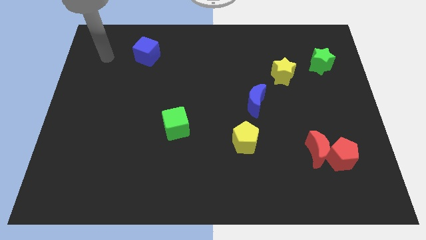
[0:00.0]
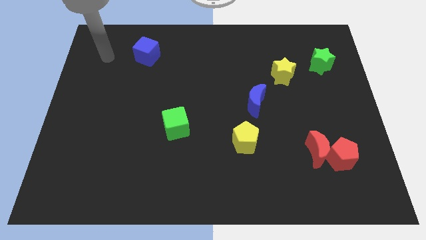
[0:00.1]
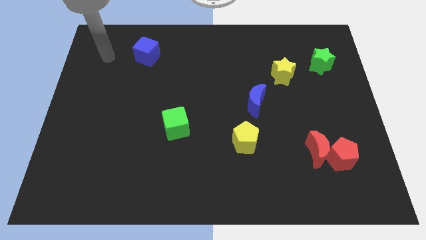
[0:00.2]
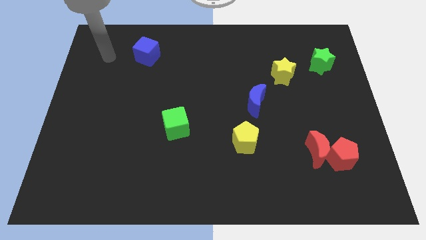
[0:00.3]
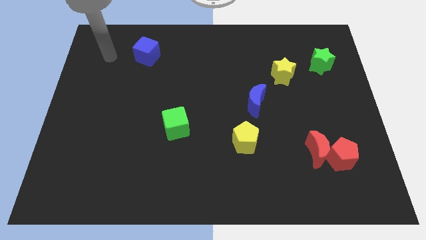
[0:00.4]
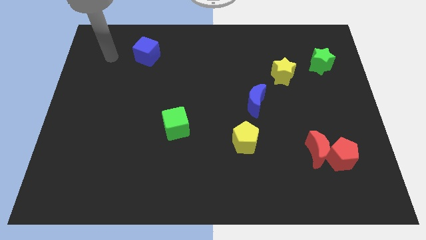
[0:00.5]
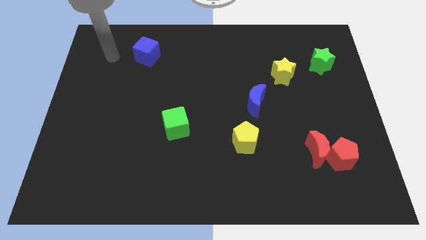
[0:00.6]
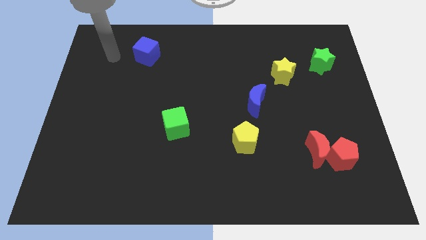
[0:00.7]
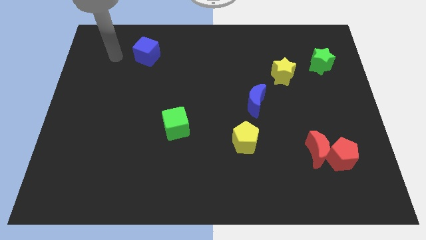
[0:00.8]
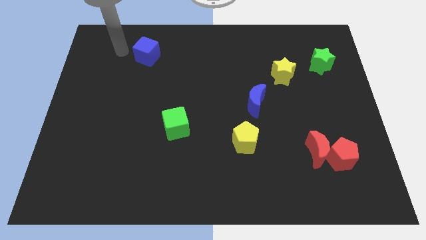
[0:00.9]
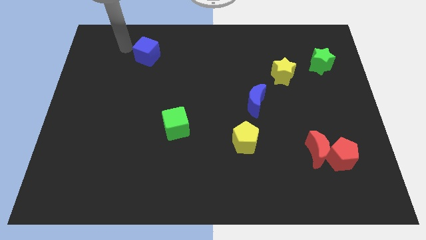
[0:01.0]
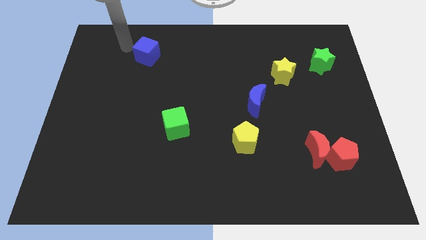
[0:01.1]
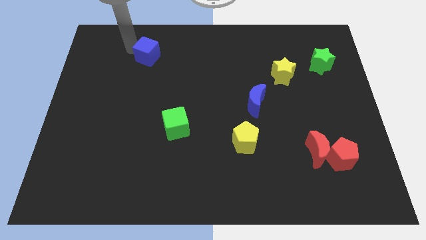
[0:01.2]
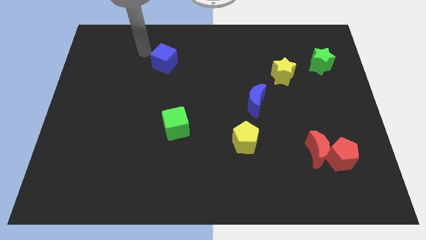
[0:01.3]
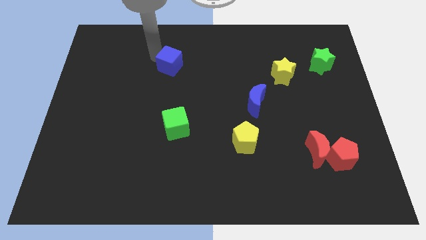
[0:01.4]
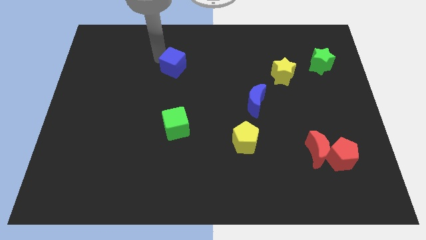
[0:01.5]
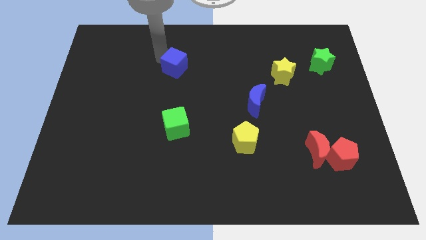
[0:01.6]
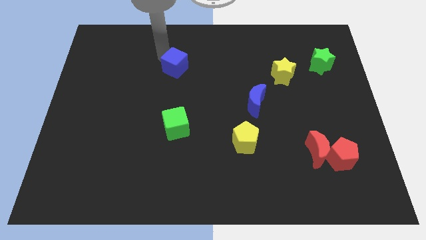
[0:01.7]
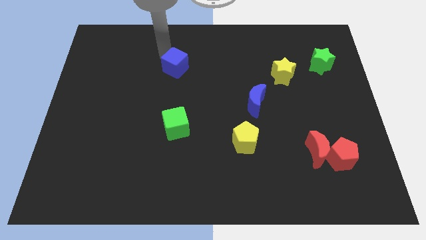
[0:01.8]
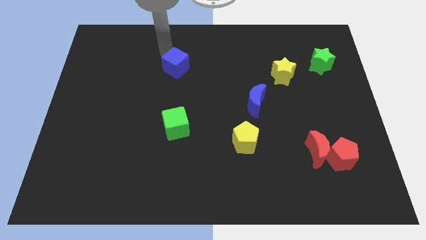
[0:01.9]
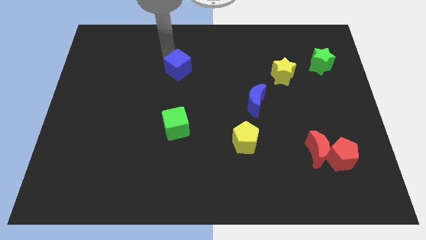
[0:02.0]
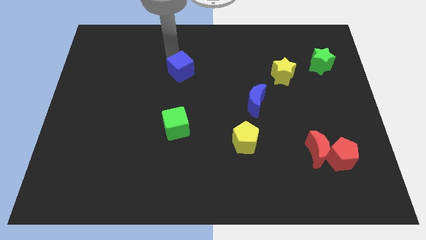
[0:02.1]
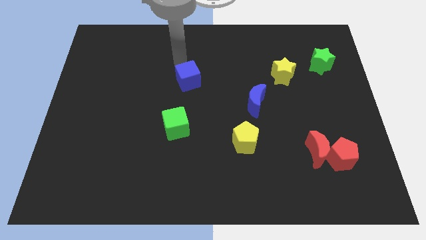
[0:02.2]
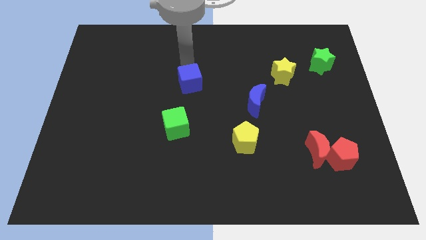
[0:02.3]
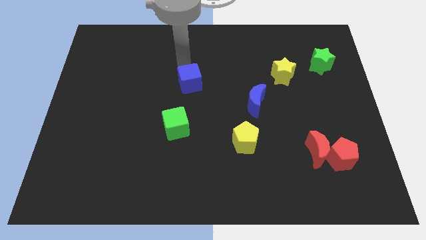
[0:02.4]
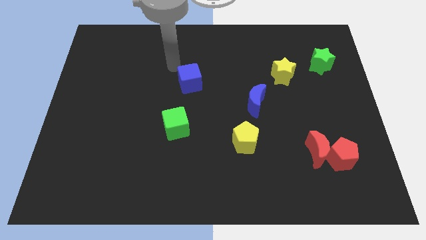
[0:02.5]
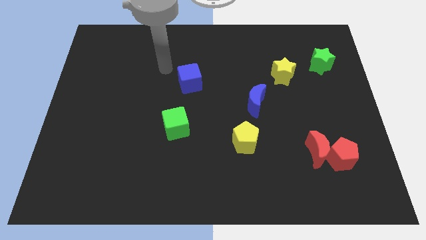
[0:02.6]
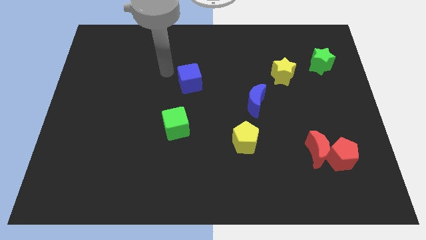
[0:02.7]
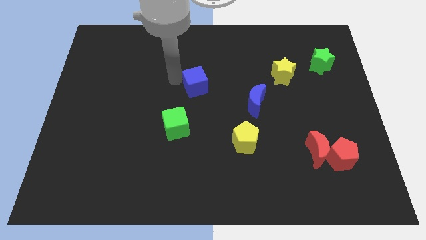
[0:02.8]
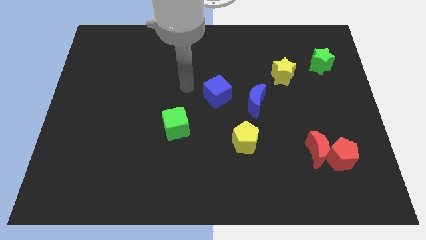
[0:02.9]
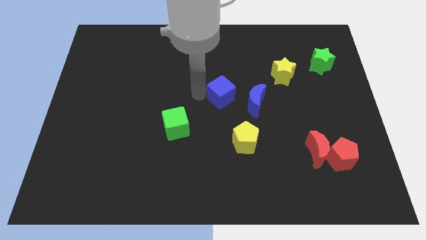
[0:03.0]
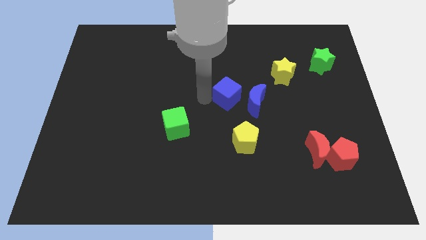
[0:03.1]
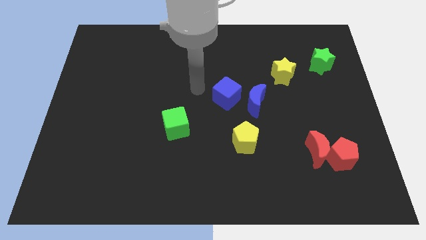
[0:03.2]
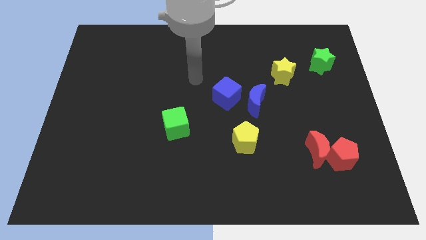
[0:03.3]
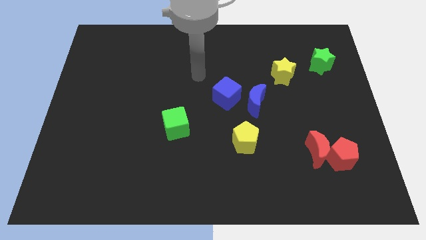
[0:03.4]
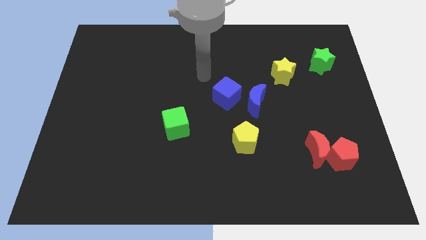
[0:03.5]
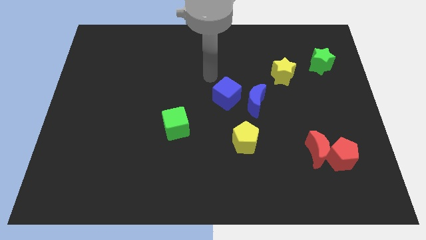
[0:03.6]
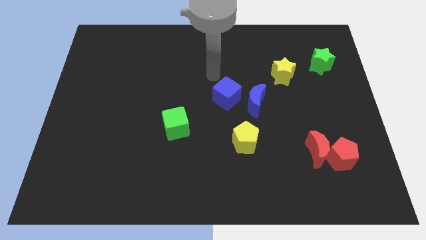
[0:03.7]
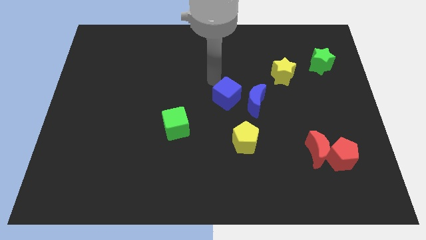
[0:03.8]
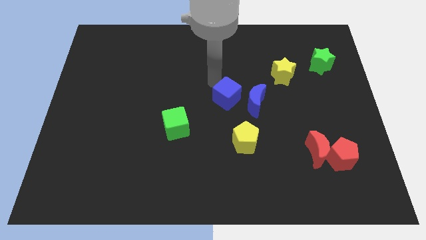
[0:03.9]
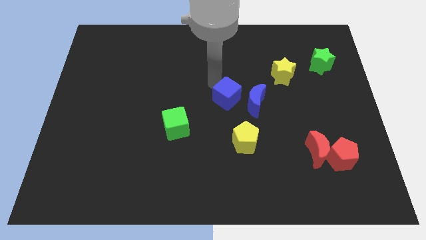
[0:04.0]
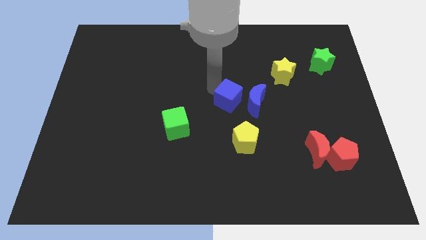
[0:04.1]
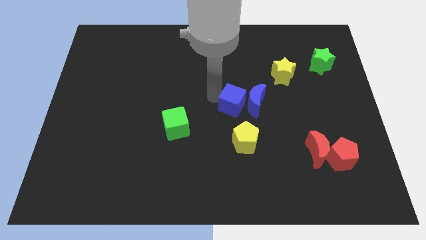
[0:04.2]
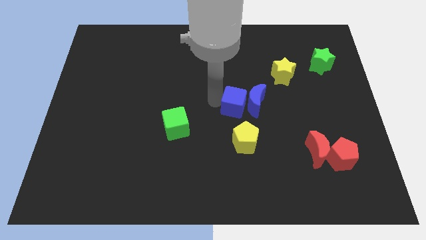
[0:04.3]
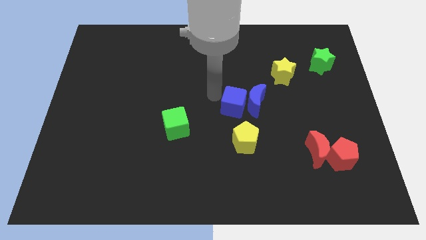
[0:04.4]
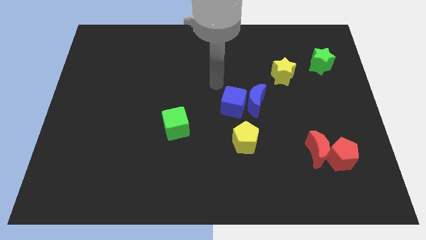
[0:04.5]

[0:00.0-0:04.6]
push the blue cube near the blue moon towards the center of the board

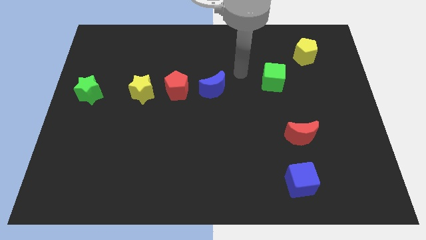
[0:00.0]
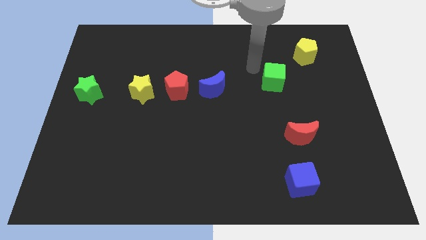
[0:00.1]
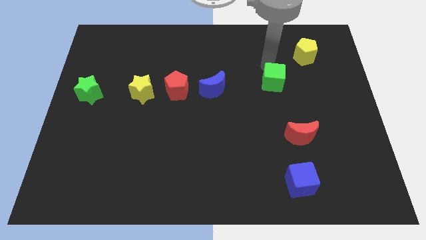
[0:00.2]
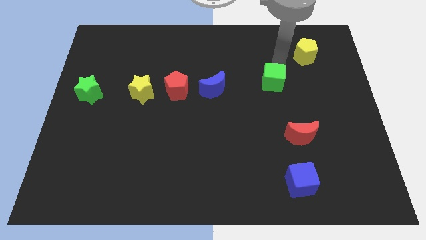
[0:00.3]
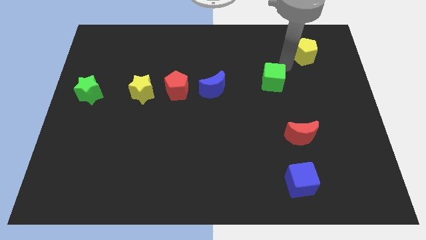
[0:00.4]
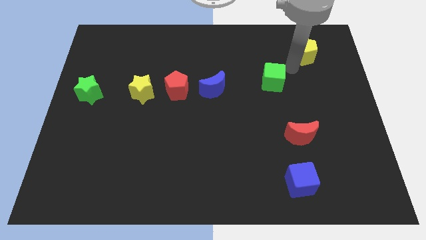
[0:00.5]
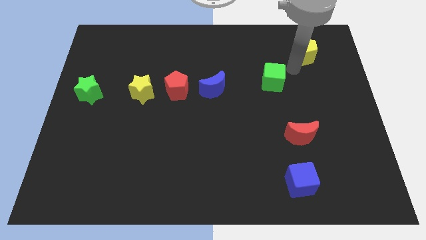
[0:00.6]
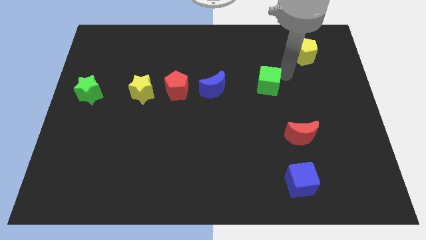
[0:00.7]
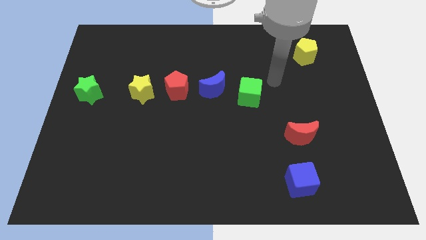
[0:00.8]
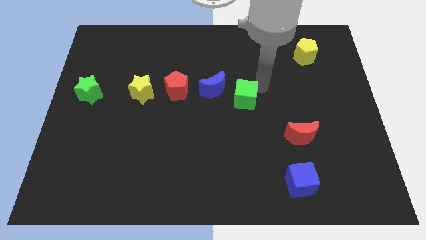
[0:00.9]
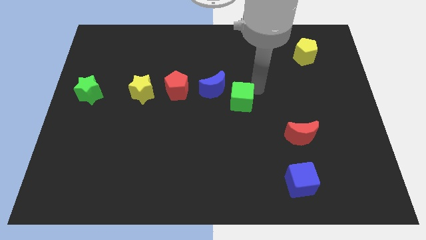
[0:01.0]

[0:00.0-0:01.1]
move the green cube to the bottom right of the blue moon

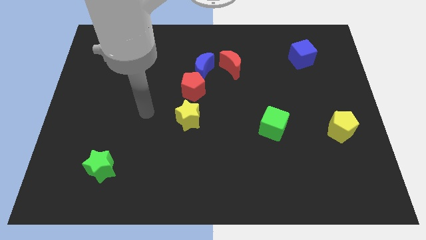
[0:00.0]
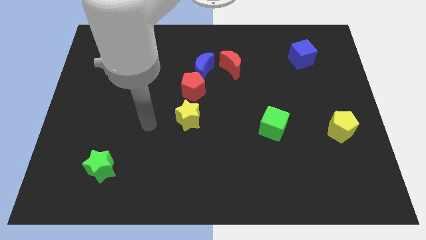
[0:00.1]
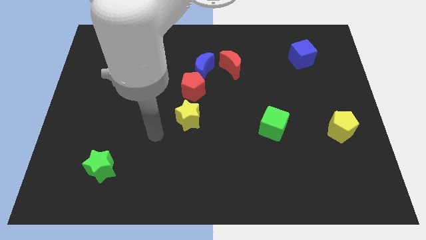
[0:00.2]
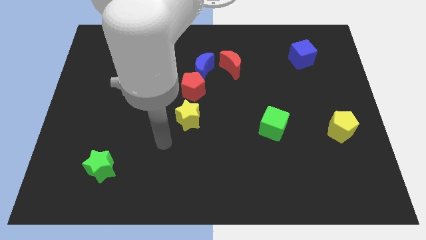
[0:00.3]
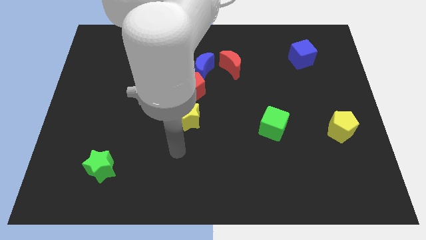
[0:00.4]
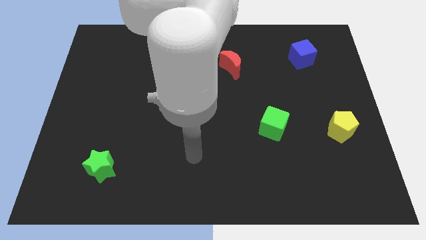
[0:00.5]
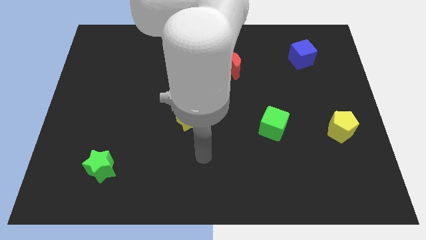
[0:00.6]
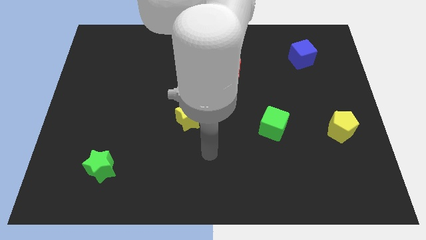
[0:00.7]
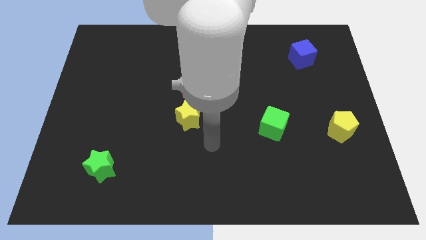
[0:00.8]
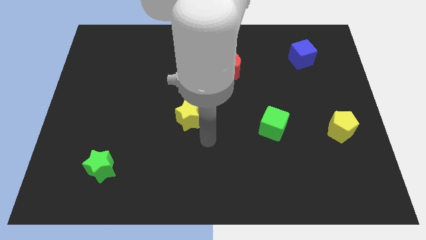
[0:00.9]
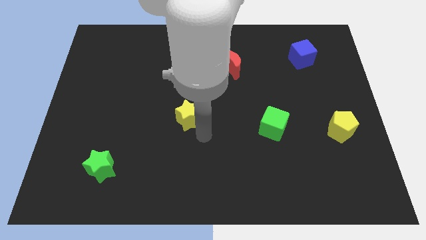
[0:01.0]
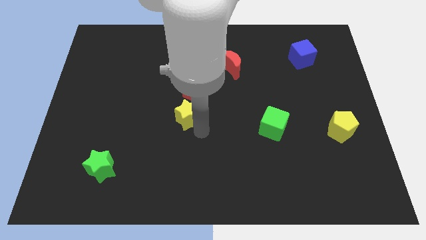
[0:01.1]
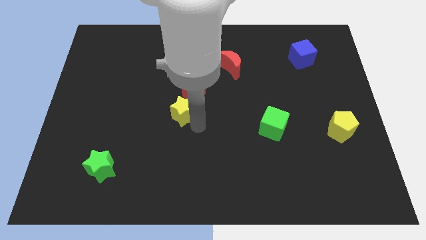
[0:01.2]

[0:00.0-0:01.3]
touch the bottom right of the yellow star

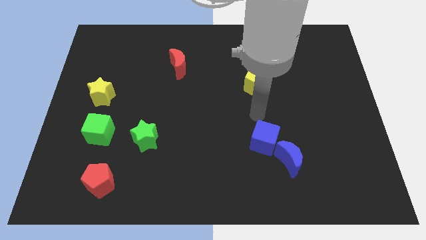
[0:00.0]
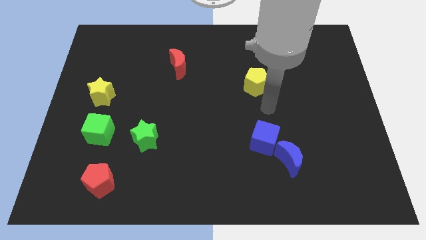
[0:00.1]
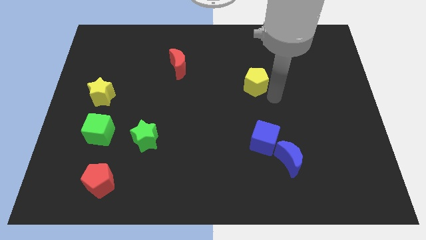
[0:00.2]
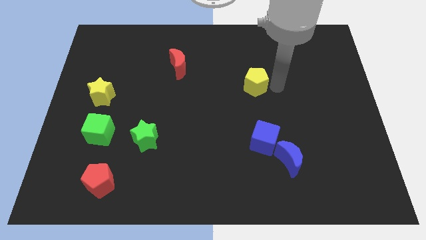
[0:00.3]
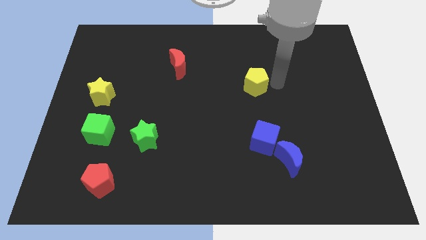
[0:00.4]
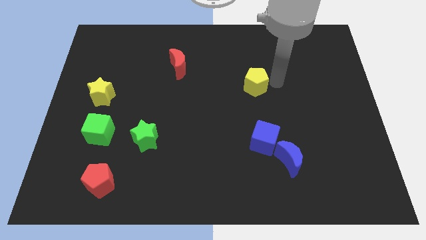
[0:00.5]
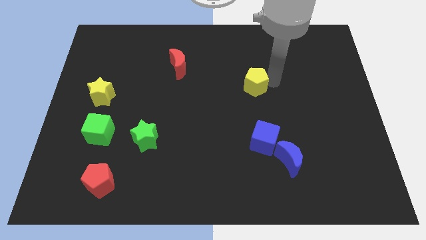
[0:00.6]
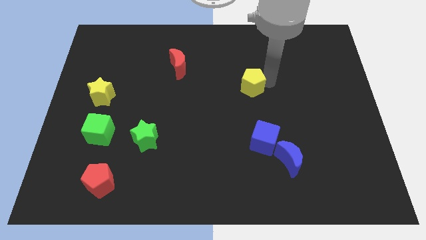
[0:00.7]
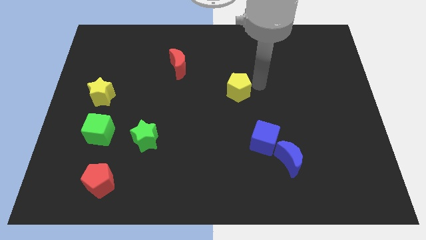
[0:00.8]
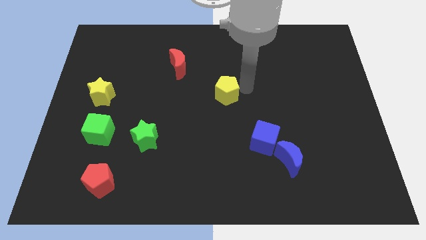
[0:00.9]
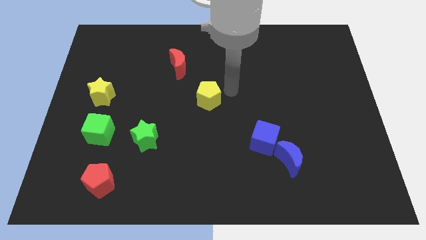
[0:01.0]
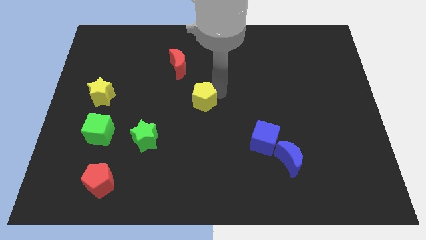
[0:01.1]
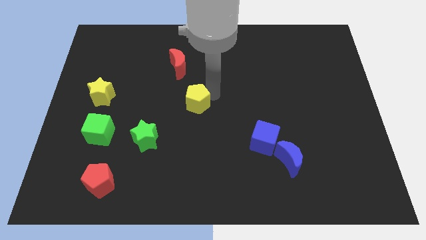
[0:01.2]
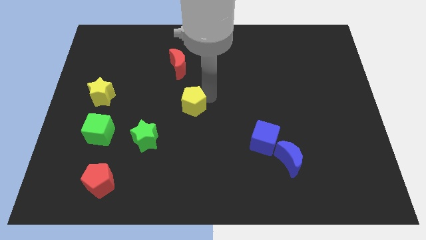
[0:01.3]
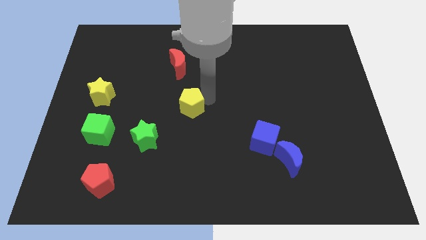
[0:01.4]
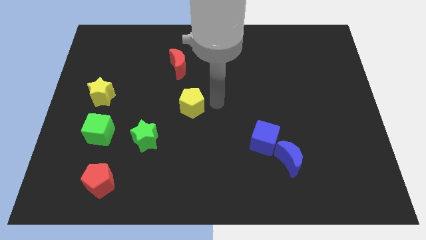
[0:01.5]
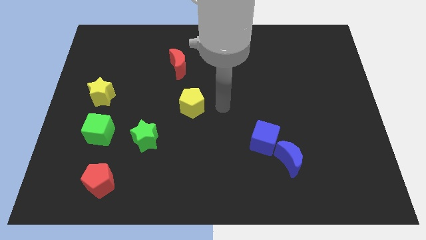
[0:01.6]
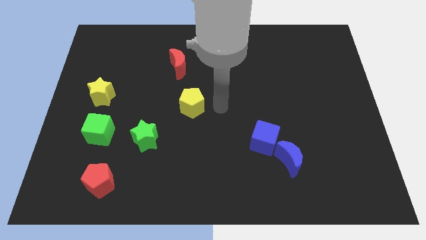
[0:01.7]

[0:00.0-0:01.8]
move the yellow pentagon to the bottom side of the red crescent
